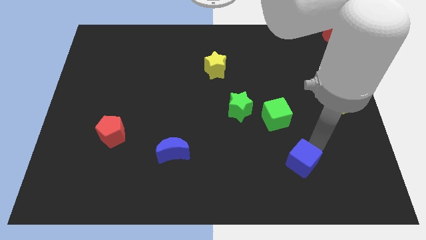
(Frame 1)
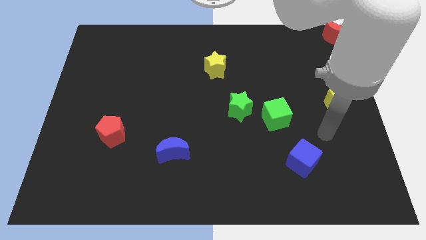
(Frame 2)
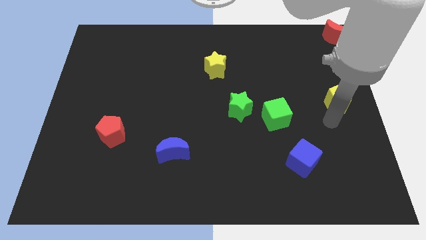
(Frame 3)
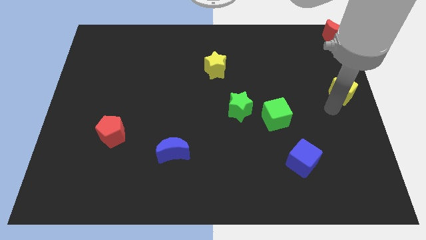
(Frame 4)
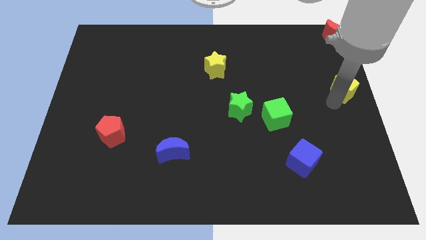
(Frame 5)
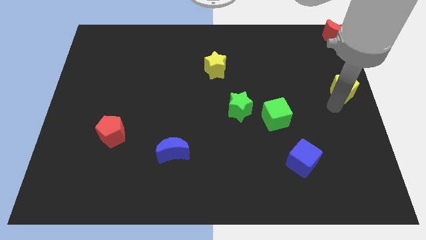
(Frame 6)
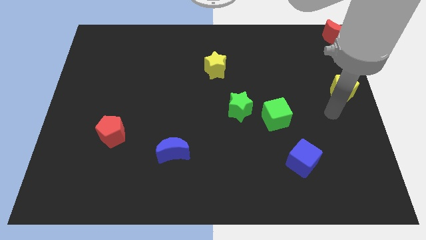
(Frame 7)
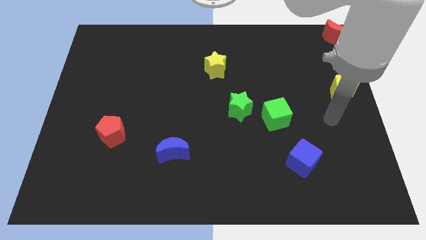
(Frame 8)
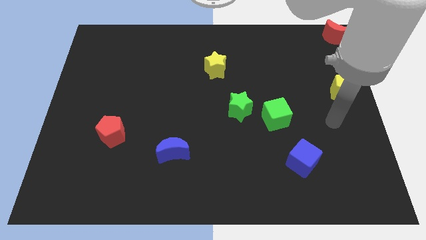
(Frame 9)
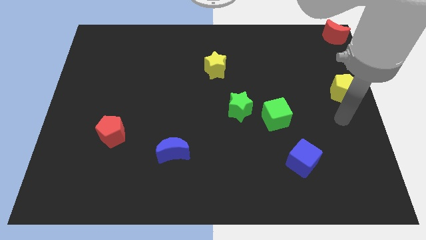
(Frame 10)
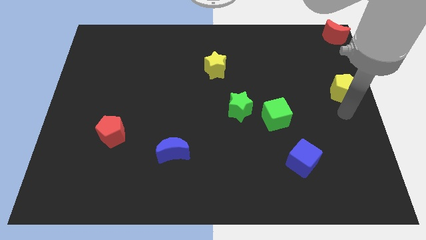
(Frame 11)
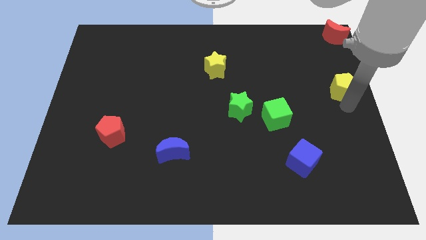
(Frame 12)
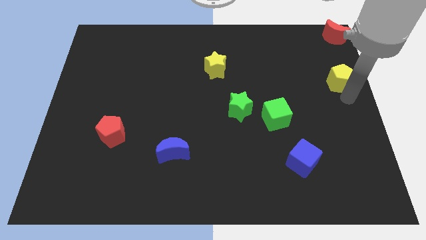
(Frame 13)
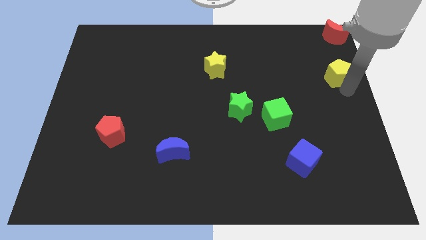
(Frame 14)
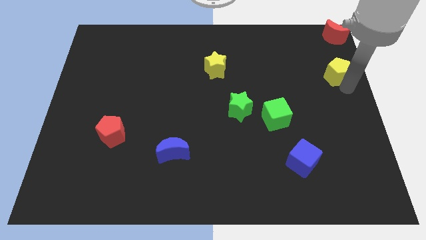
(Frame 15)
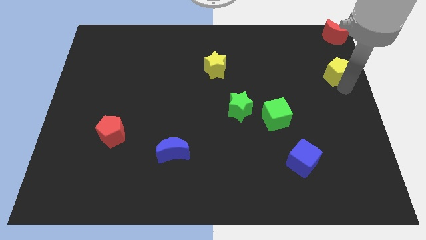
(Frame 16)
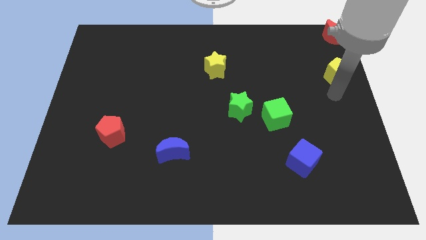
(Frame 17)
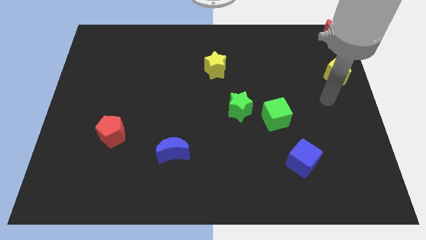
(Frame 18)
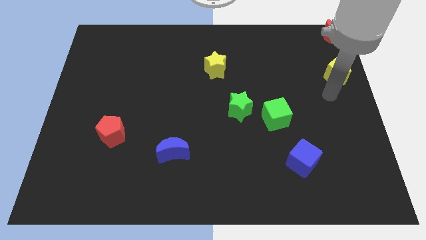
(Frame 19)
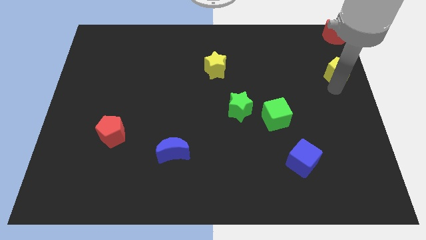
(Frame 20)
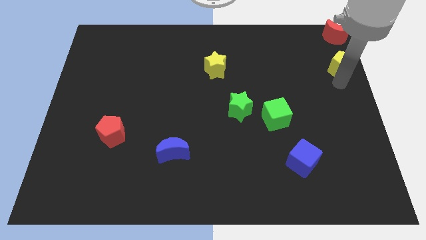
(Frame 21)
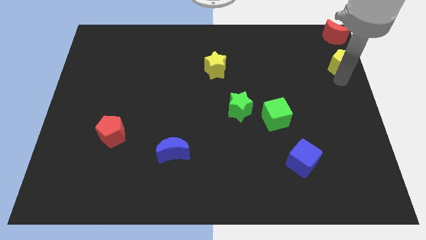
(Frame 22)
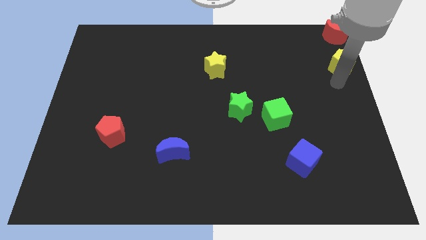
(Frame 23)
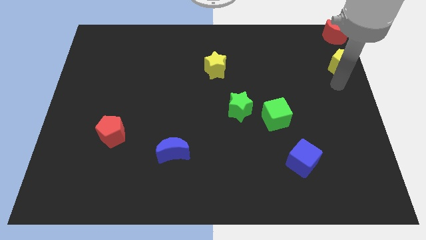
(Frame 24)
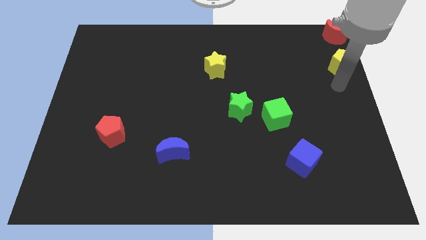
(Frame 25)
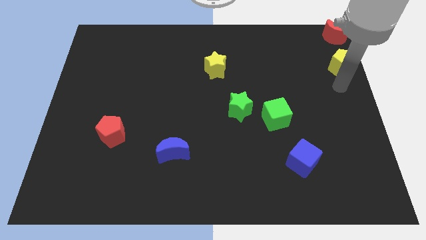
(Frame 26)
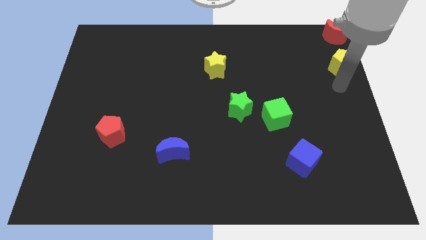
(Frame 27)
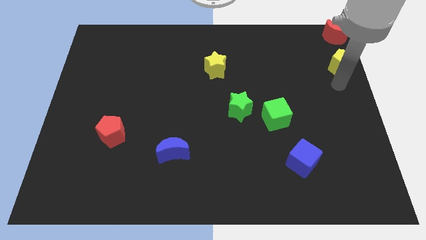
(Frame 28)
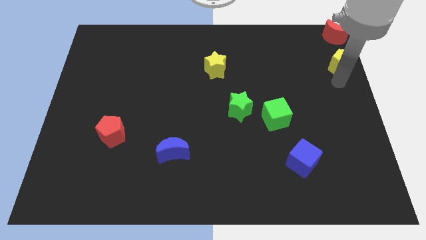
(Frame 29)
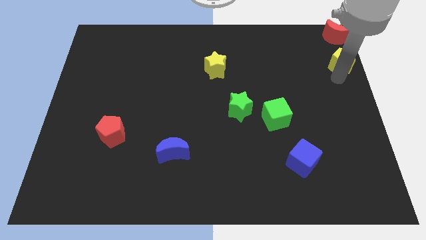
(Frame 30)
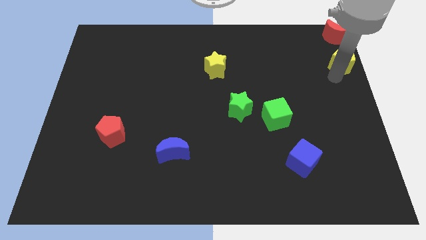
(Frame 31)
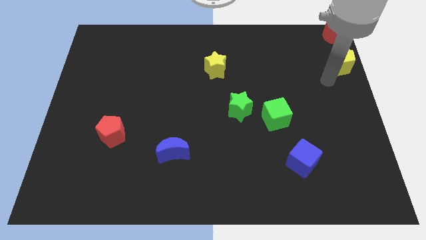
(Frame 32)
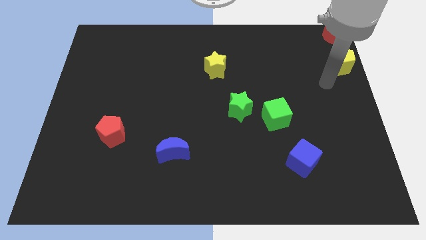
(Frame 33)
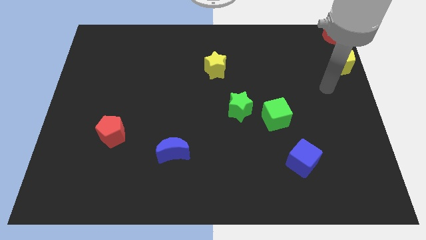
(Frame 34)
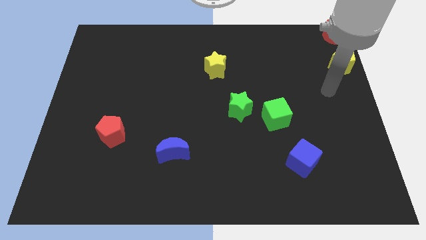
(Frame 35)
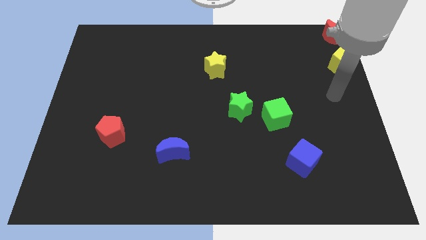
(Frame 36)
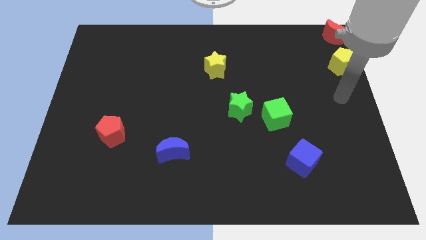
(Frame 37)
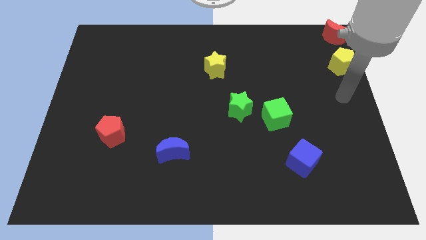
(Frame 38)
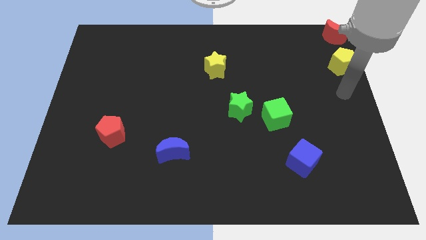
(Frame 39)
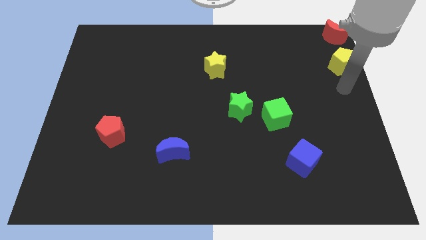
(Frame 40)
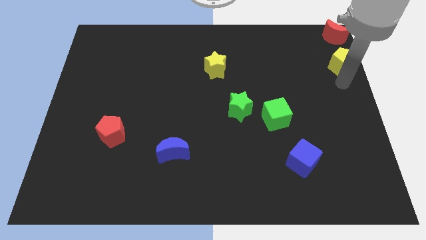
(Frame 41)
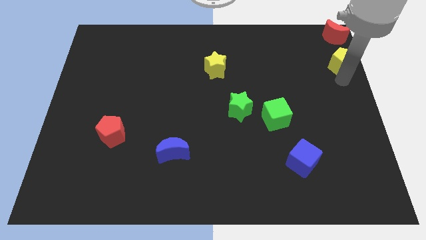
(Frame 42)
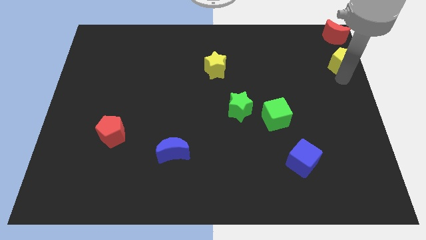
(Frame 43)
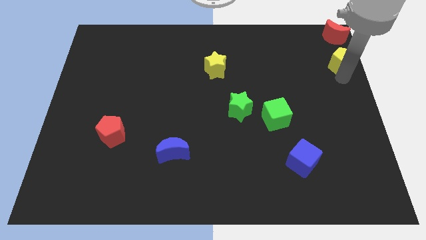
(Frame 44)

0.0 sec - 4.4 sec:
push the yellow pentagon towards the red crescent

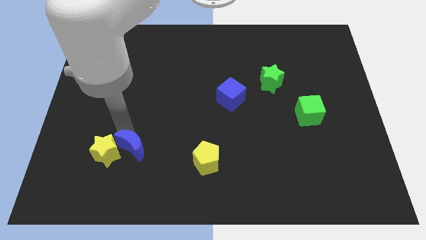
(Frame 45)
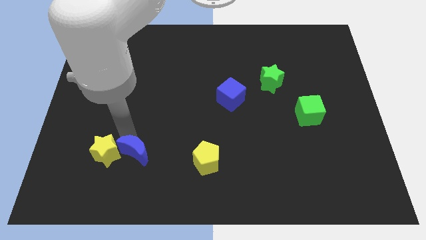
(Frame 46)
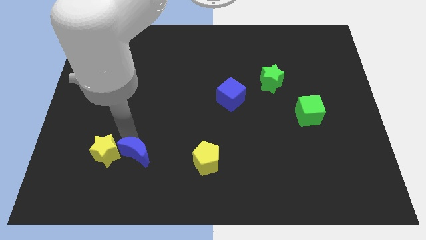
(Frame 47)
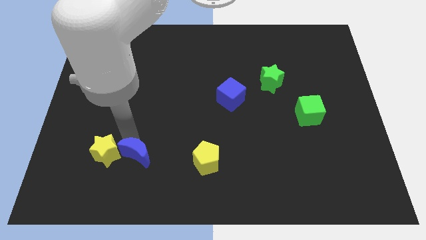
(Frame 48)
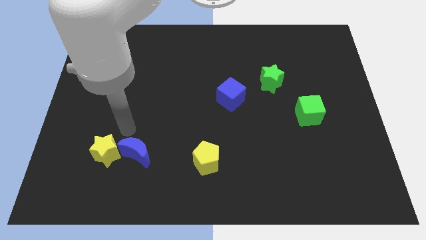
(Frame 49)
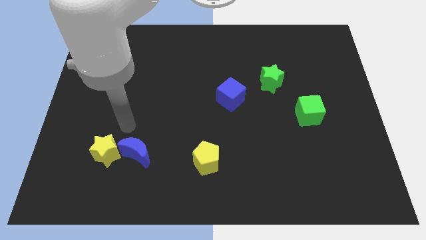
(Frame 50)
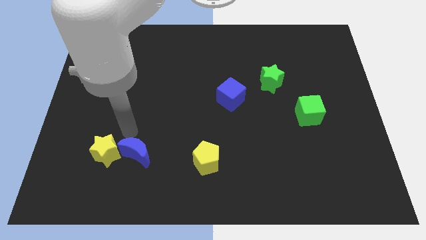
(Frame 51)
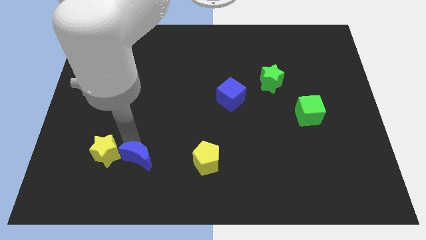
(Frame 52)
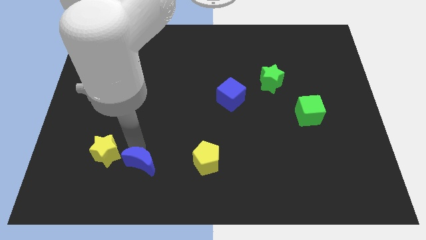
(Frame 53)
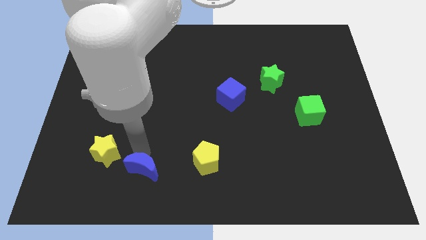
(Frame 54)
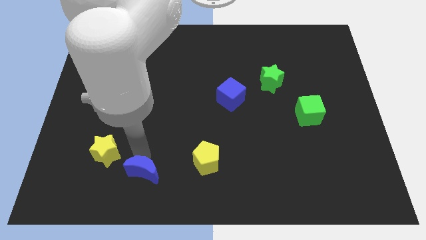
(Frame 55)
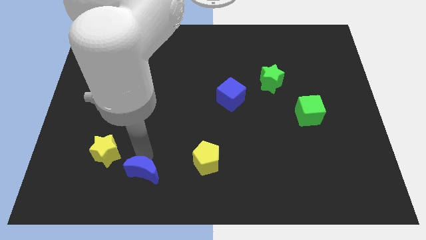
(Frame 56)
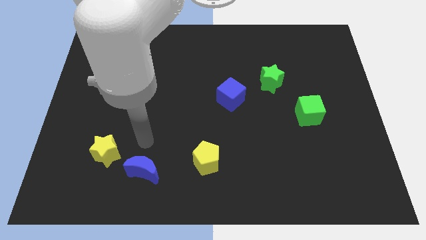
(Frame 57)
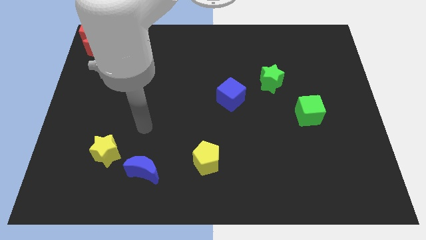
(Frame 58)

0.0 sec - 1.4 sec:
move the blue moon down slightly towards the bottom center

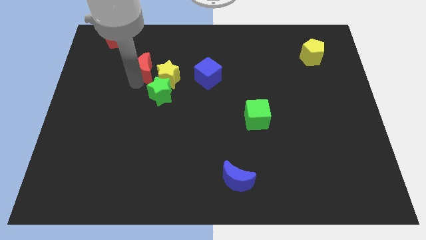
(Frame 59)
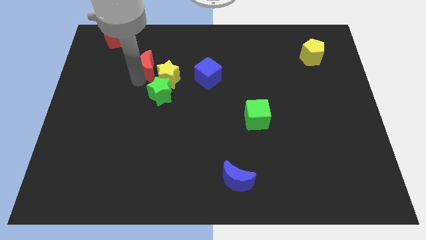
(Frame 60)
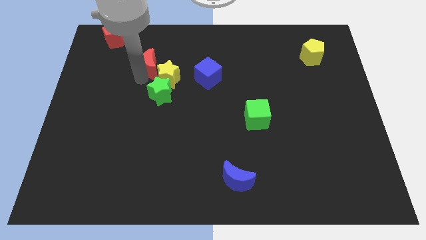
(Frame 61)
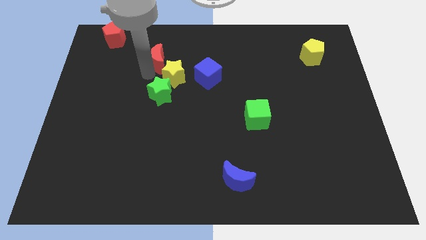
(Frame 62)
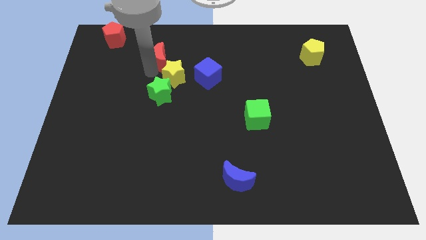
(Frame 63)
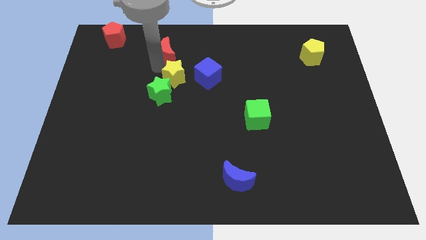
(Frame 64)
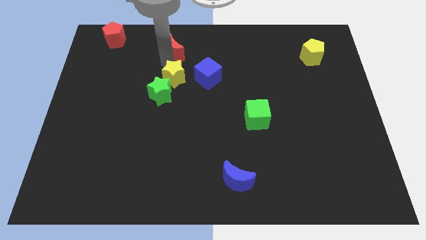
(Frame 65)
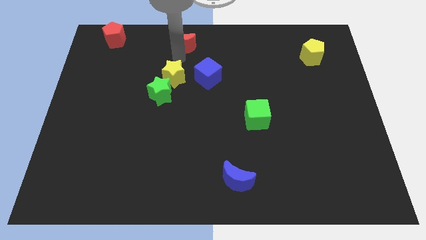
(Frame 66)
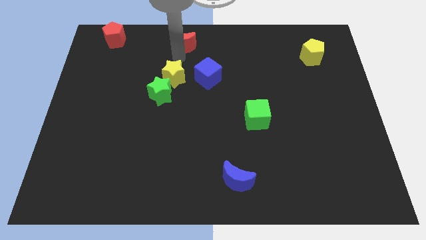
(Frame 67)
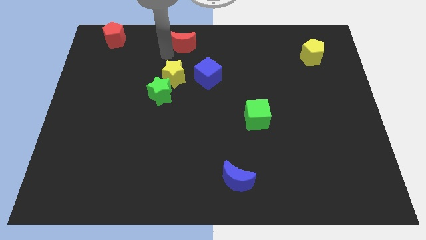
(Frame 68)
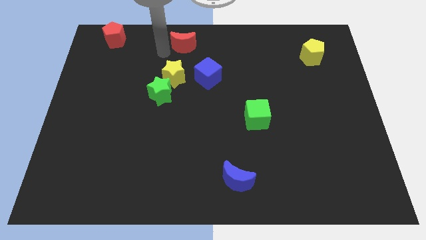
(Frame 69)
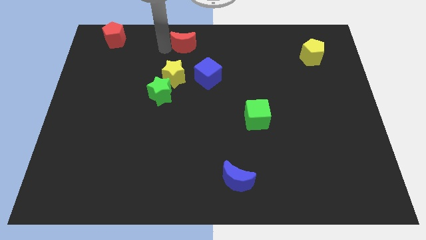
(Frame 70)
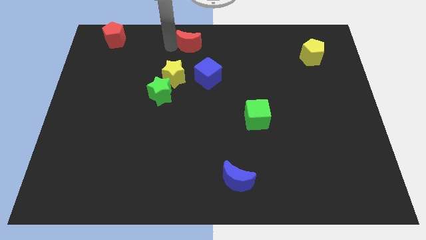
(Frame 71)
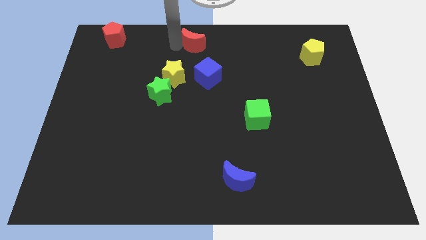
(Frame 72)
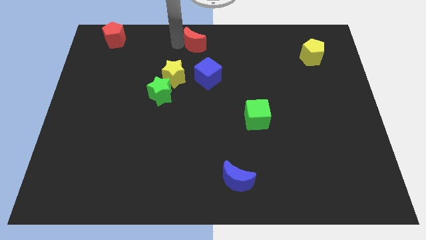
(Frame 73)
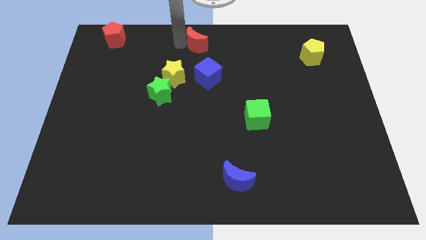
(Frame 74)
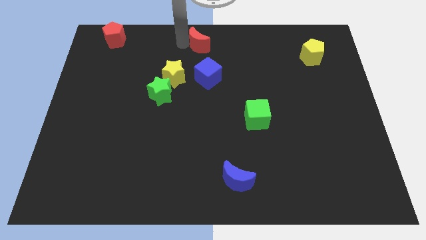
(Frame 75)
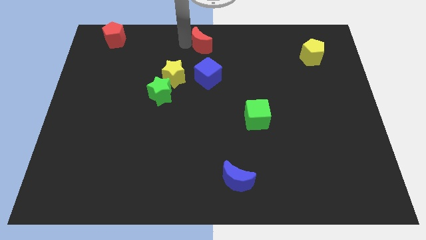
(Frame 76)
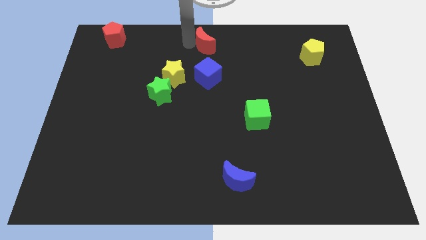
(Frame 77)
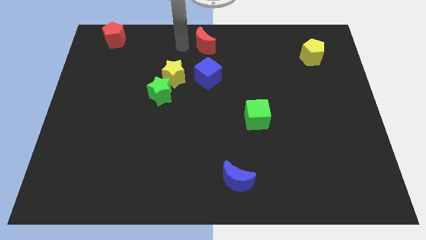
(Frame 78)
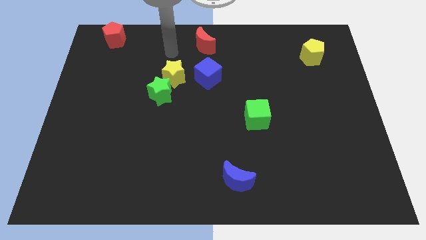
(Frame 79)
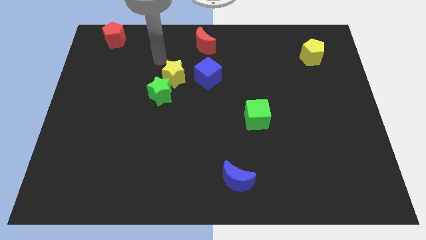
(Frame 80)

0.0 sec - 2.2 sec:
push the red crescent to the top center of the board

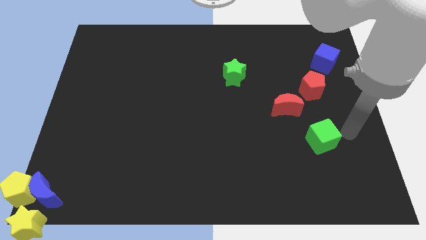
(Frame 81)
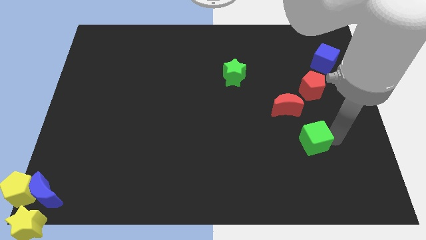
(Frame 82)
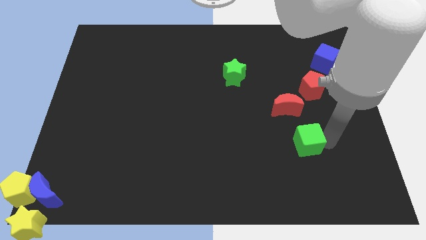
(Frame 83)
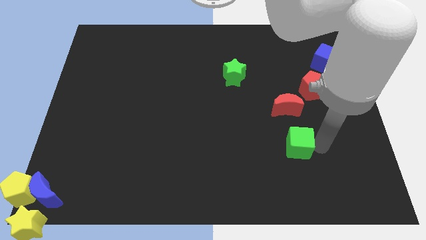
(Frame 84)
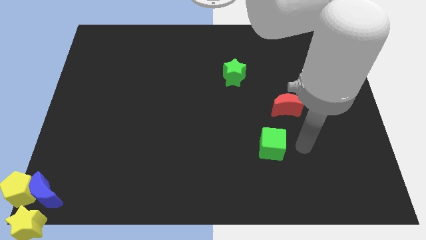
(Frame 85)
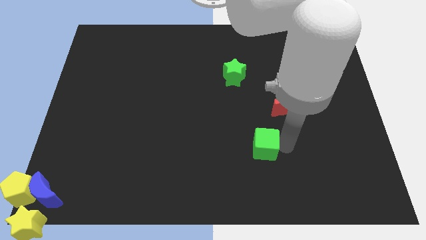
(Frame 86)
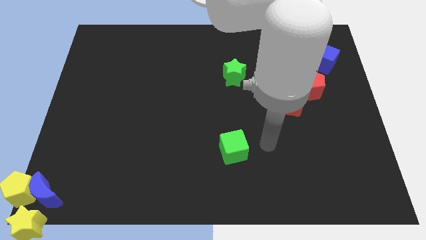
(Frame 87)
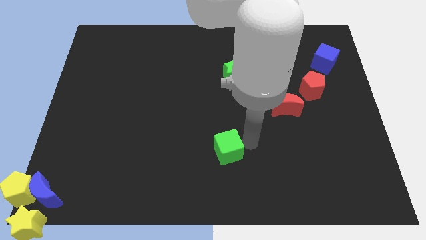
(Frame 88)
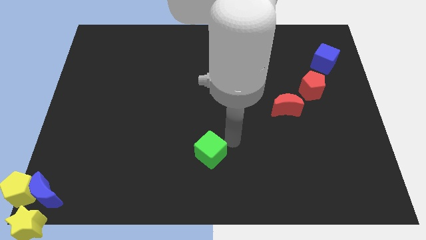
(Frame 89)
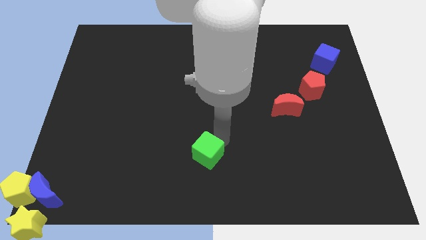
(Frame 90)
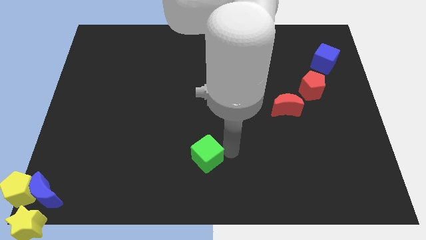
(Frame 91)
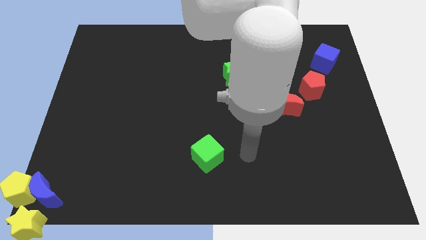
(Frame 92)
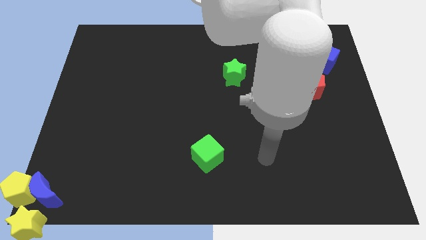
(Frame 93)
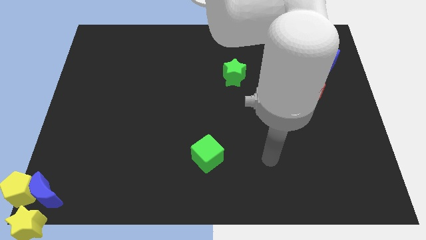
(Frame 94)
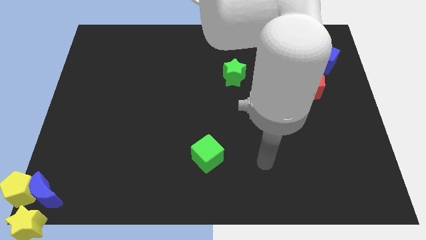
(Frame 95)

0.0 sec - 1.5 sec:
move the green cube to the center of the board
